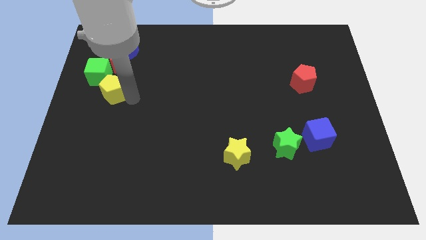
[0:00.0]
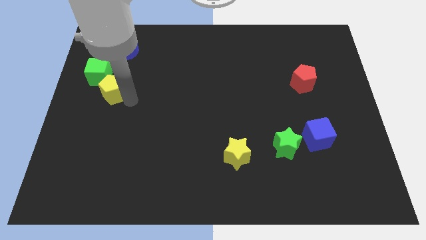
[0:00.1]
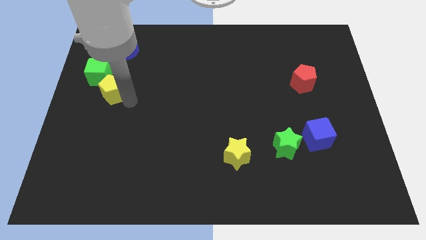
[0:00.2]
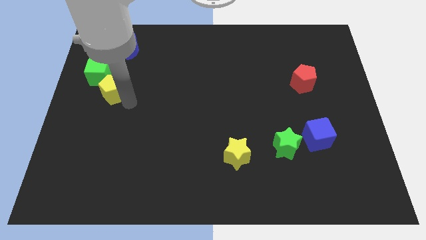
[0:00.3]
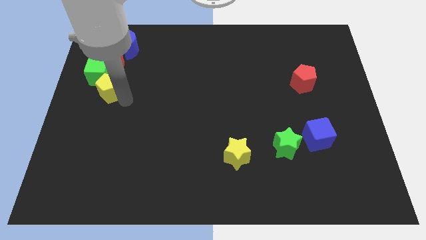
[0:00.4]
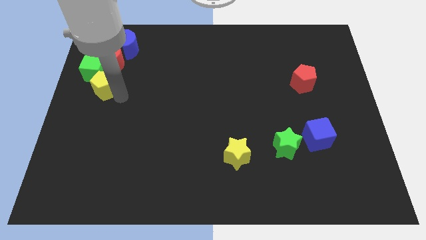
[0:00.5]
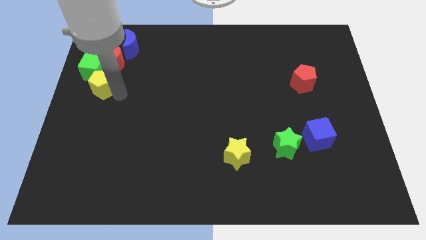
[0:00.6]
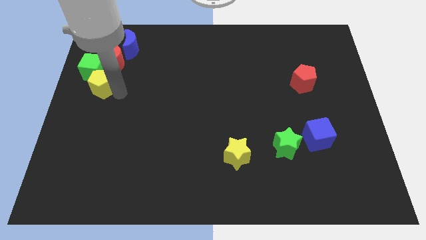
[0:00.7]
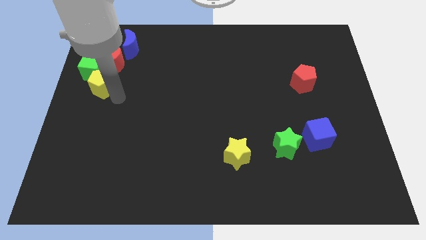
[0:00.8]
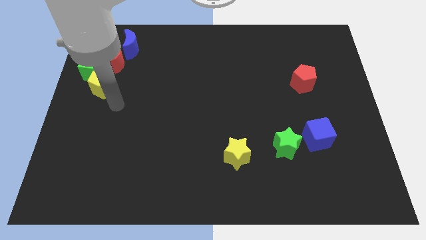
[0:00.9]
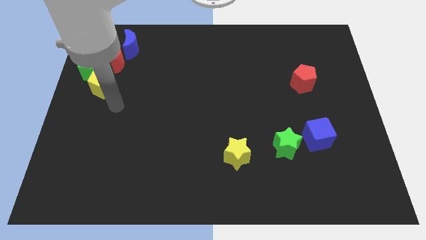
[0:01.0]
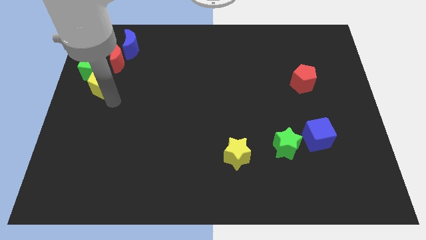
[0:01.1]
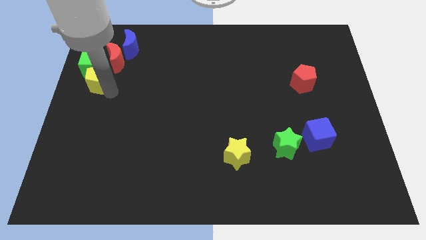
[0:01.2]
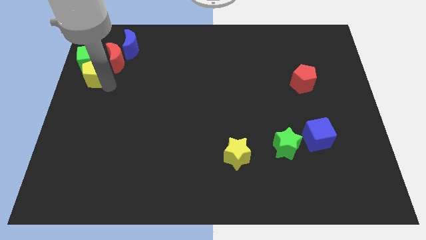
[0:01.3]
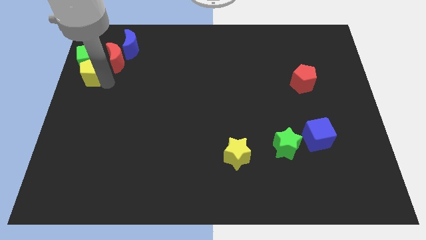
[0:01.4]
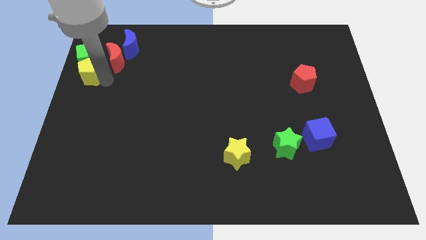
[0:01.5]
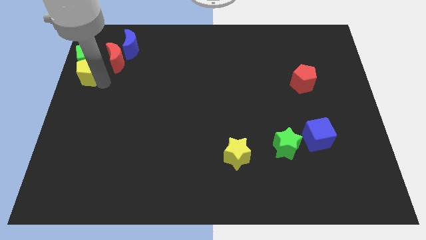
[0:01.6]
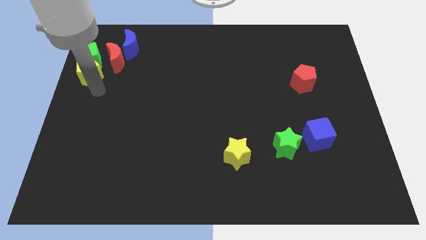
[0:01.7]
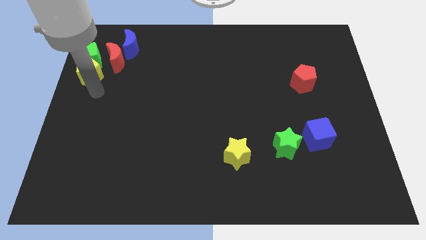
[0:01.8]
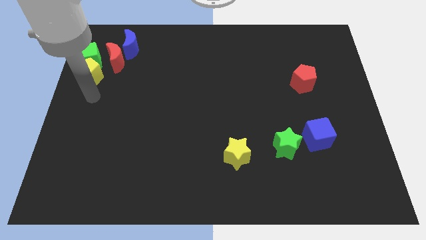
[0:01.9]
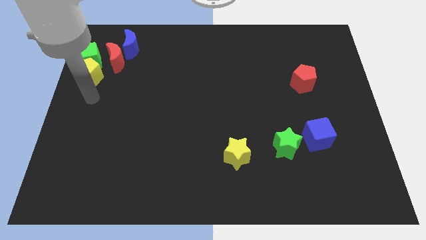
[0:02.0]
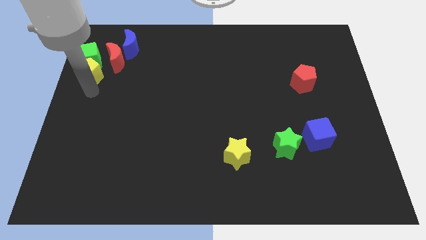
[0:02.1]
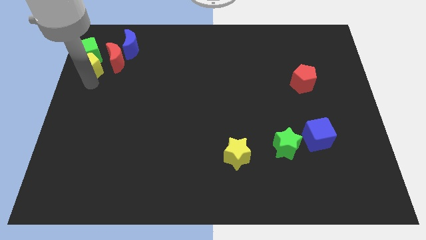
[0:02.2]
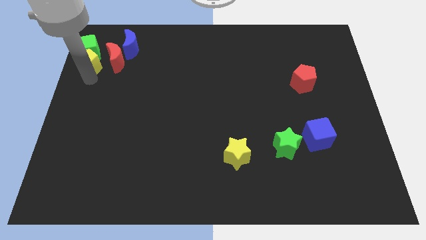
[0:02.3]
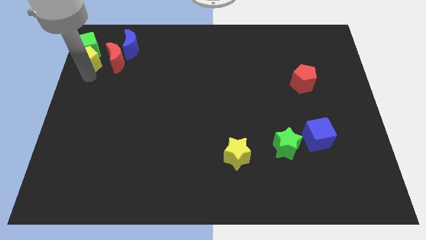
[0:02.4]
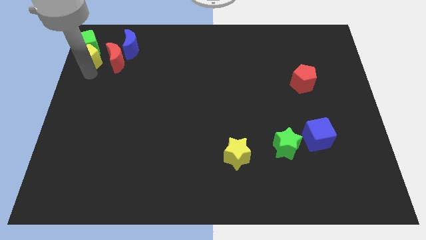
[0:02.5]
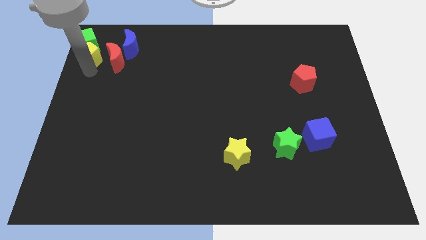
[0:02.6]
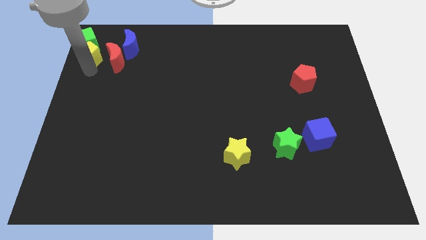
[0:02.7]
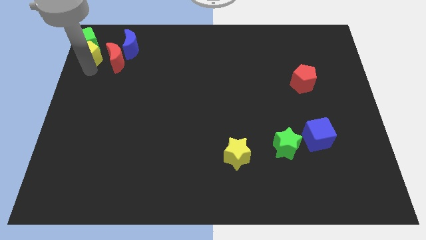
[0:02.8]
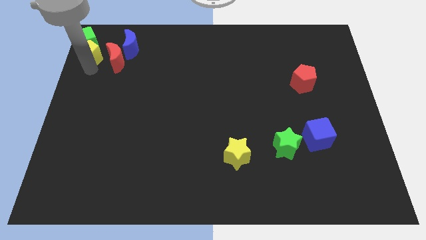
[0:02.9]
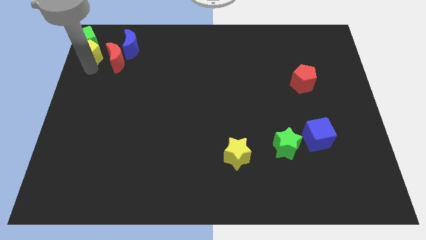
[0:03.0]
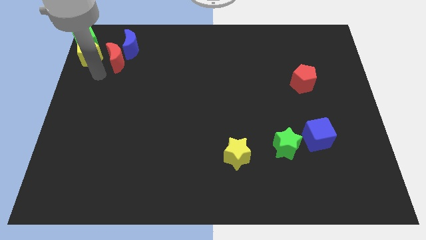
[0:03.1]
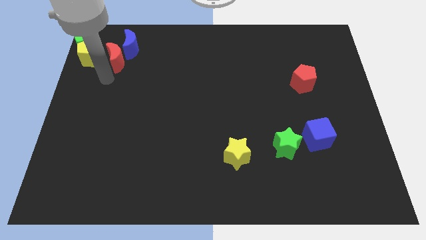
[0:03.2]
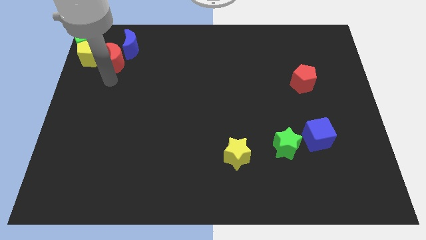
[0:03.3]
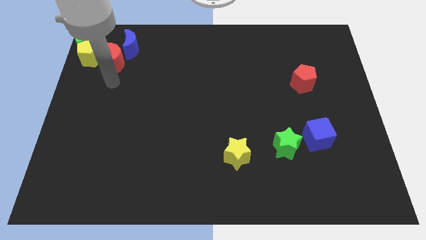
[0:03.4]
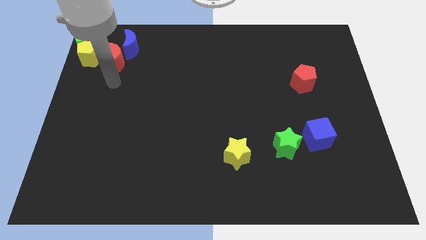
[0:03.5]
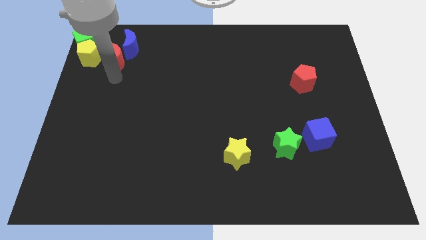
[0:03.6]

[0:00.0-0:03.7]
push the green cube and the yellow pentagon towards the top left corner of the board

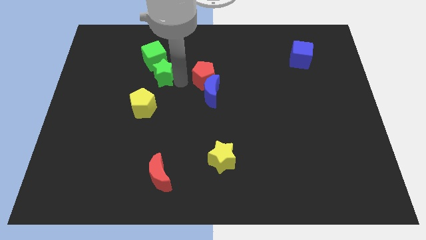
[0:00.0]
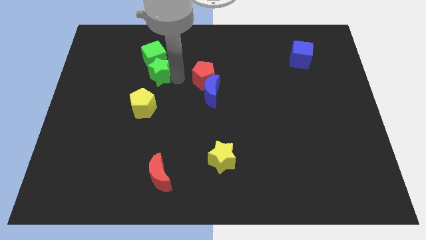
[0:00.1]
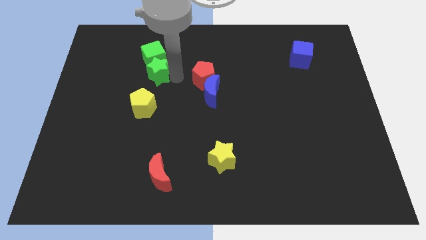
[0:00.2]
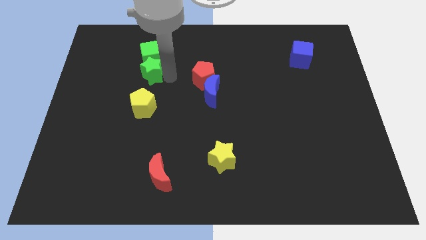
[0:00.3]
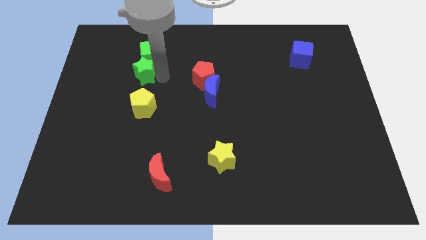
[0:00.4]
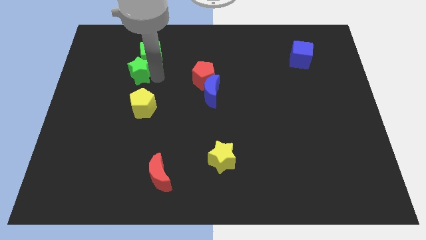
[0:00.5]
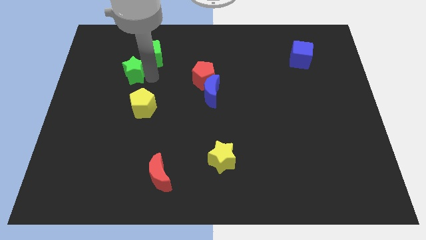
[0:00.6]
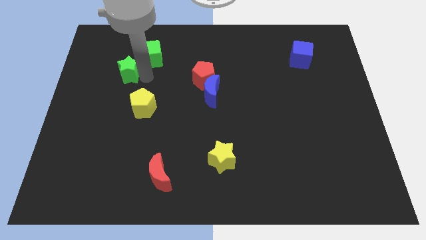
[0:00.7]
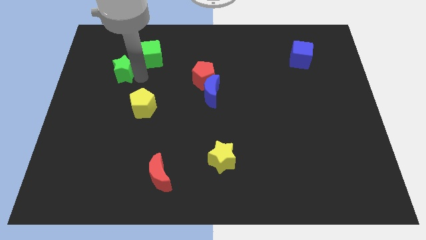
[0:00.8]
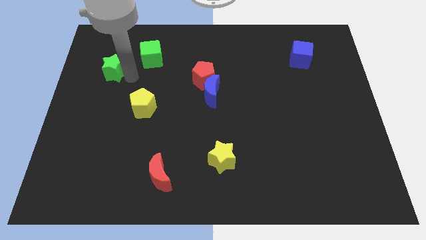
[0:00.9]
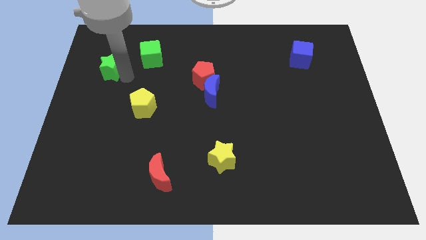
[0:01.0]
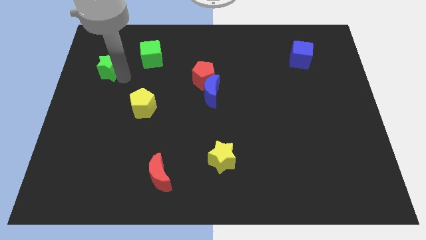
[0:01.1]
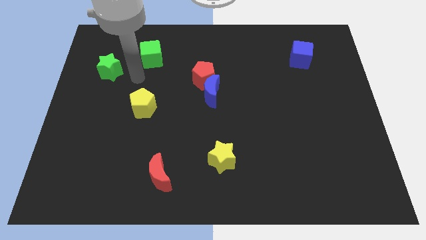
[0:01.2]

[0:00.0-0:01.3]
separate the green blocks

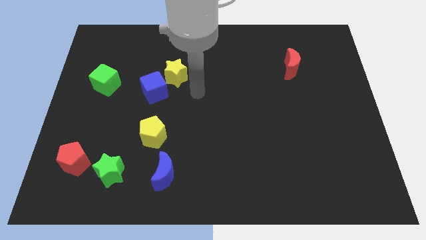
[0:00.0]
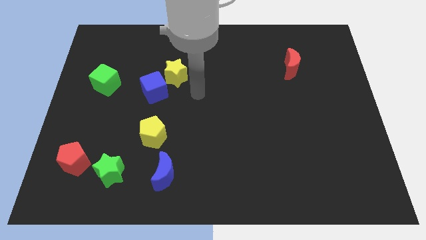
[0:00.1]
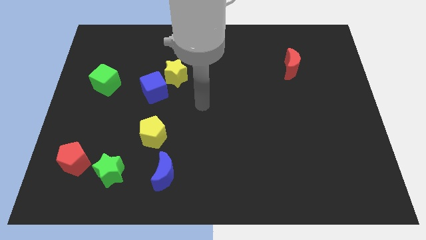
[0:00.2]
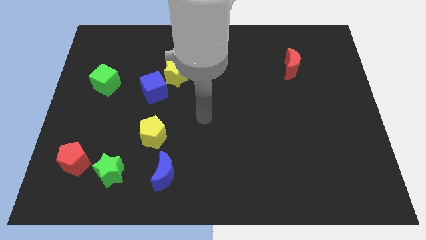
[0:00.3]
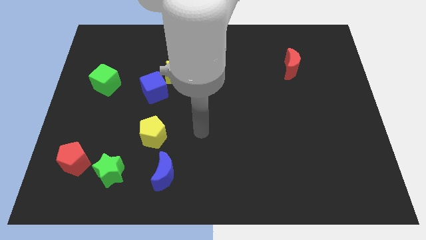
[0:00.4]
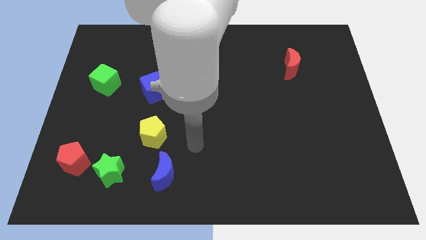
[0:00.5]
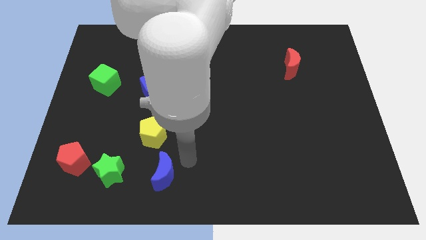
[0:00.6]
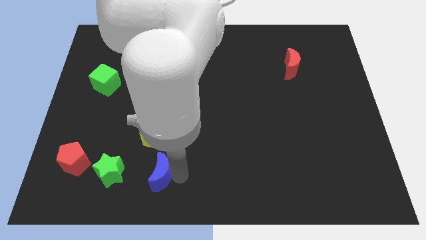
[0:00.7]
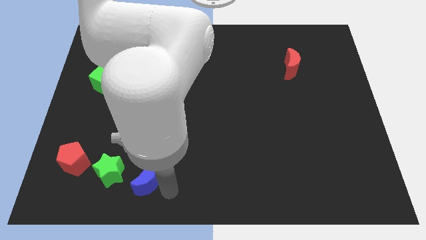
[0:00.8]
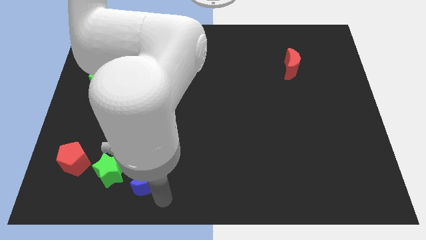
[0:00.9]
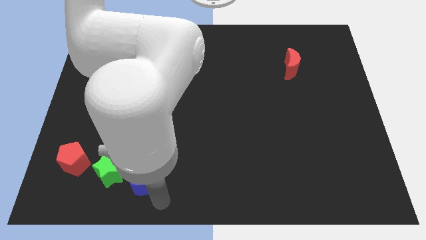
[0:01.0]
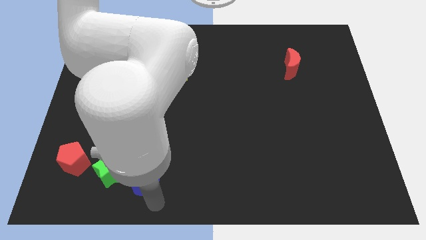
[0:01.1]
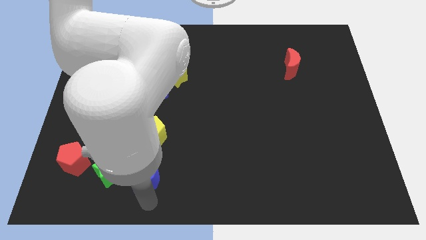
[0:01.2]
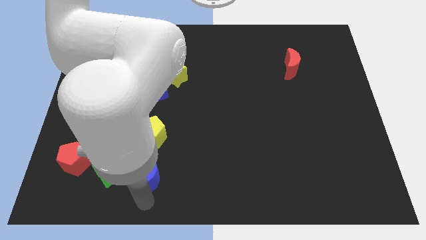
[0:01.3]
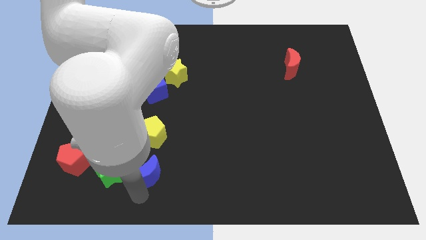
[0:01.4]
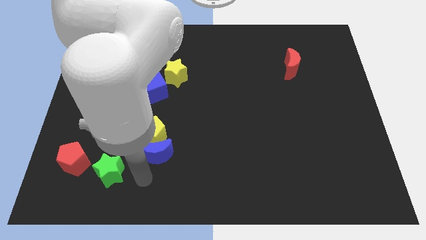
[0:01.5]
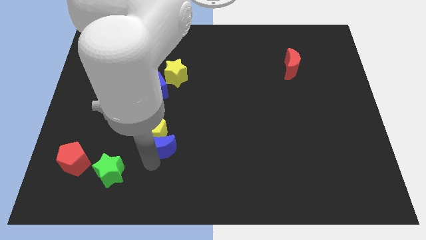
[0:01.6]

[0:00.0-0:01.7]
put the blue moon into the yellow pentagon

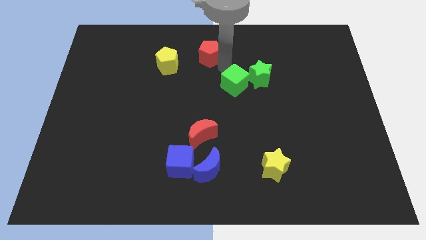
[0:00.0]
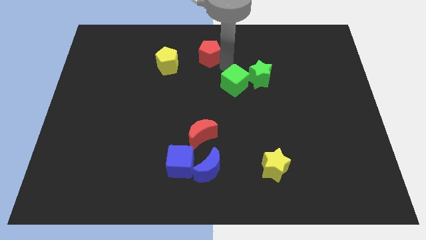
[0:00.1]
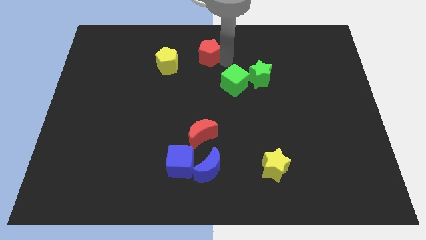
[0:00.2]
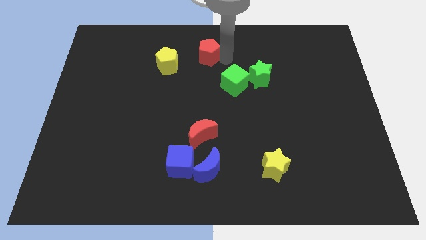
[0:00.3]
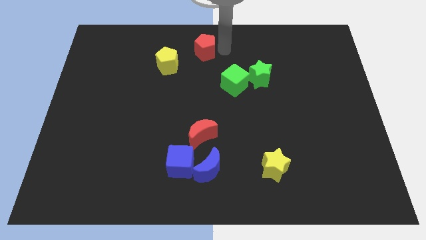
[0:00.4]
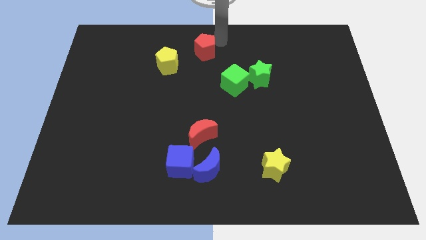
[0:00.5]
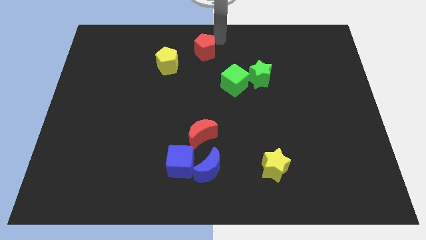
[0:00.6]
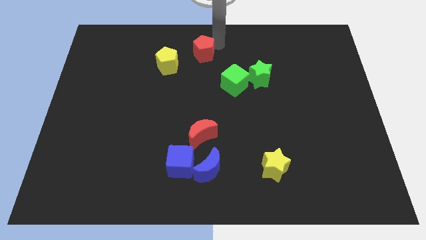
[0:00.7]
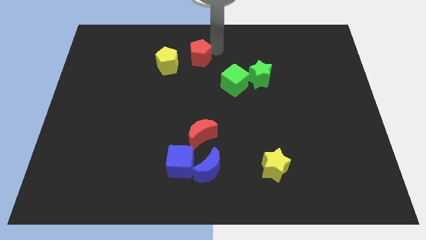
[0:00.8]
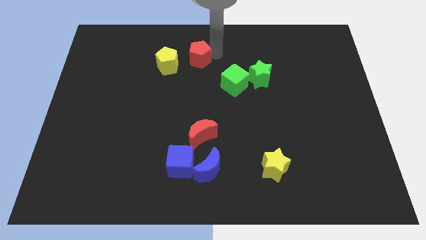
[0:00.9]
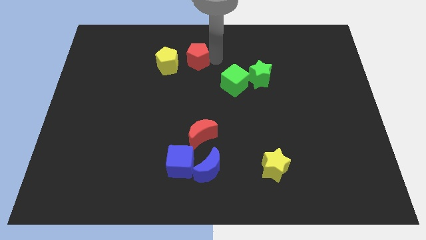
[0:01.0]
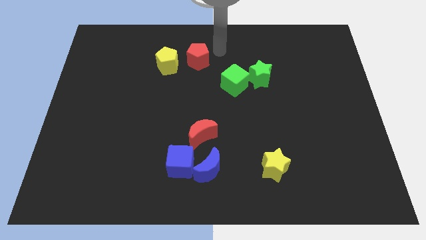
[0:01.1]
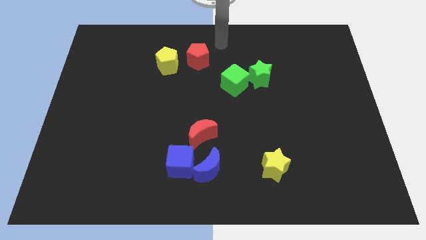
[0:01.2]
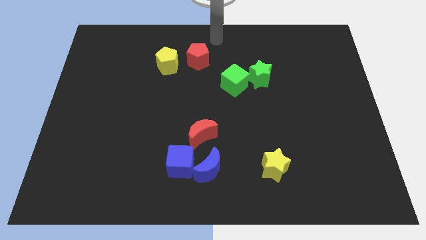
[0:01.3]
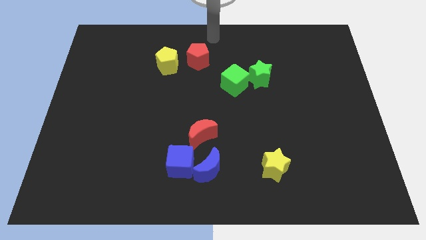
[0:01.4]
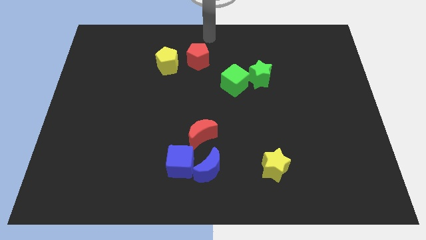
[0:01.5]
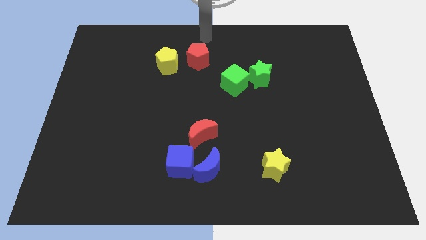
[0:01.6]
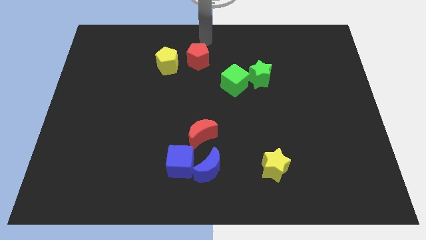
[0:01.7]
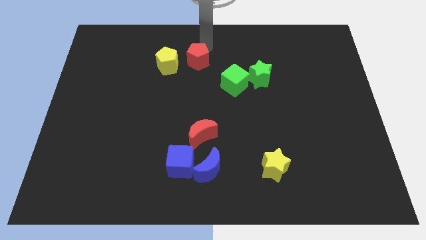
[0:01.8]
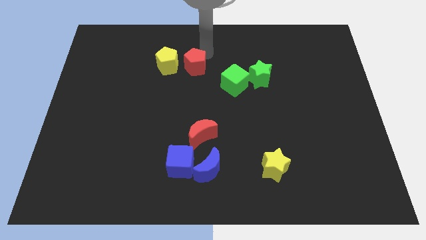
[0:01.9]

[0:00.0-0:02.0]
slide the red pentagon parallel right to the yellow pentagon

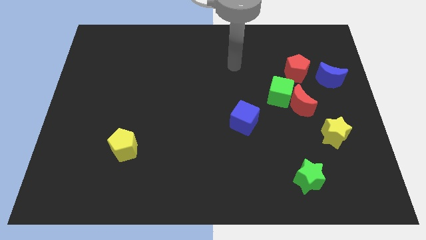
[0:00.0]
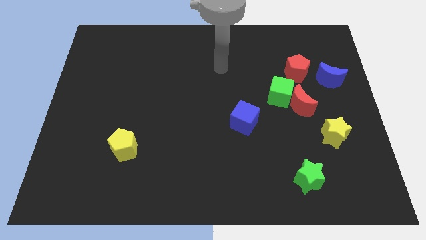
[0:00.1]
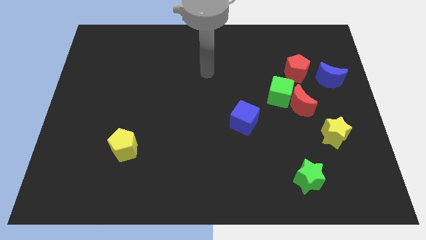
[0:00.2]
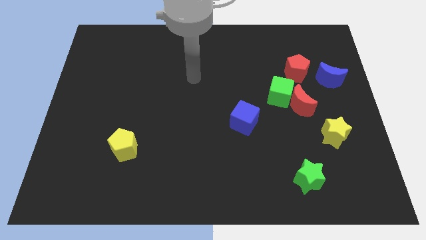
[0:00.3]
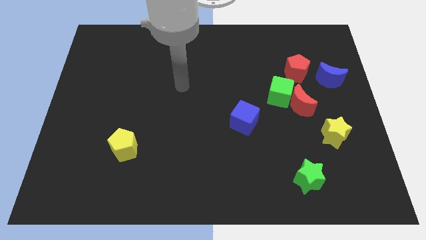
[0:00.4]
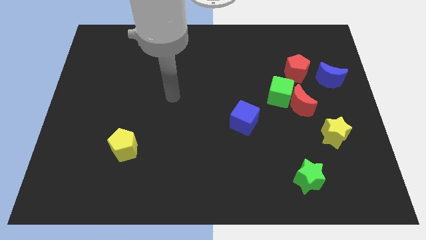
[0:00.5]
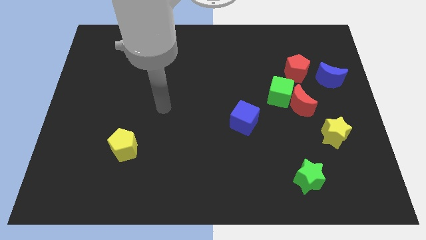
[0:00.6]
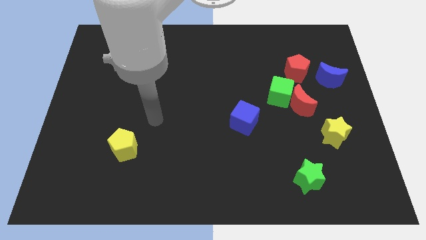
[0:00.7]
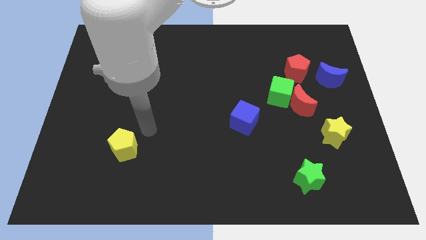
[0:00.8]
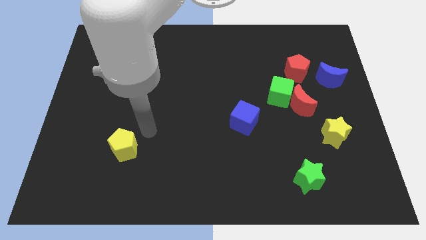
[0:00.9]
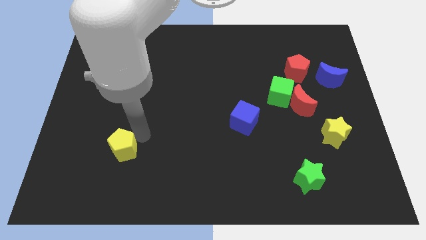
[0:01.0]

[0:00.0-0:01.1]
tap on the right side of yellow pentagon
